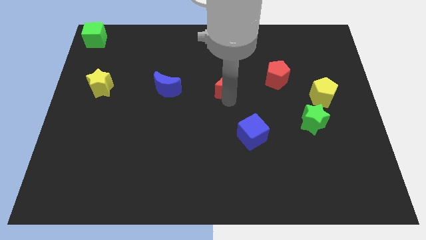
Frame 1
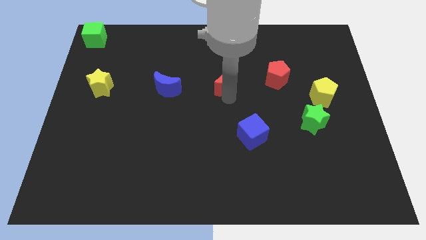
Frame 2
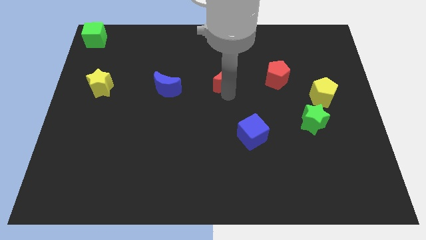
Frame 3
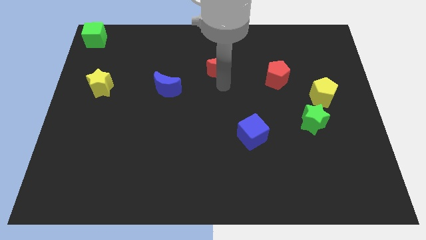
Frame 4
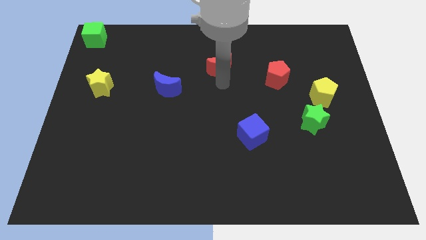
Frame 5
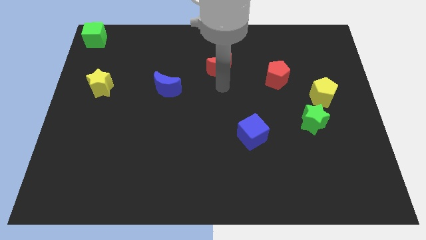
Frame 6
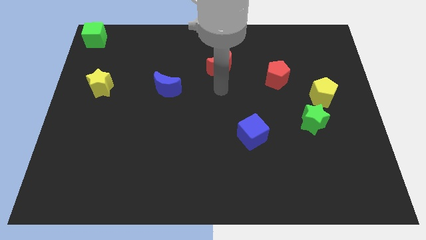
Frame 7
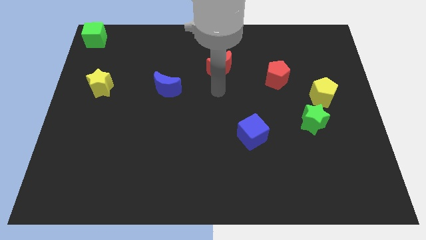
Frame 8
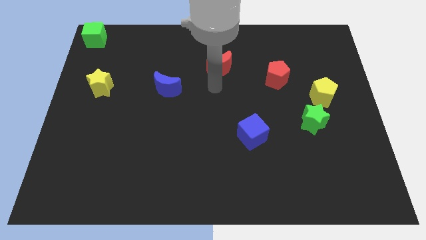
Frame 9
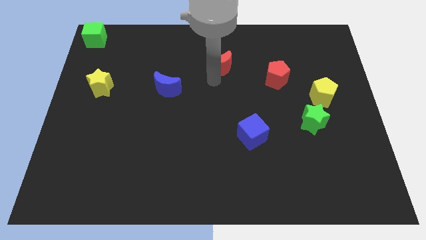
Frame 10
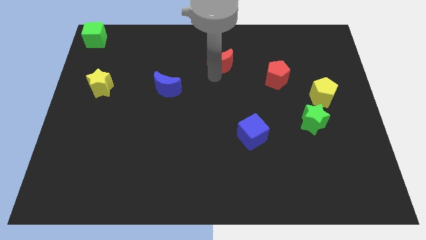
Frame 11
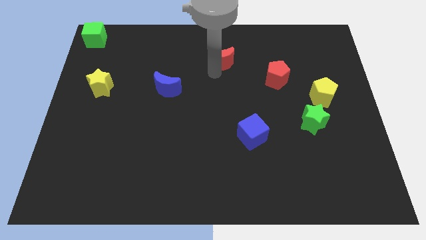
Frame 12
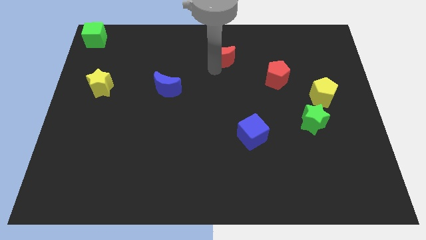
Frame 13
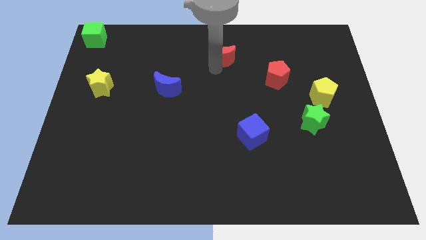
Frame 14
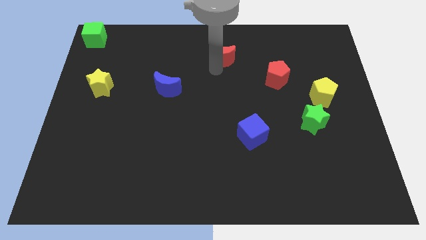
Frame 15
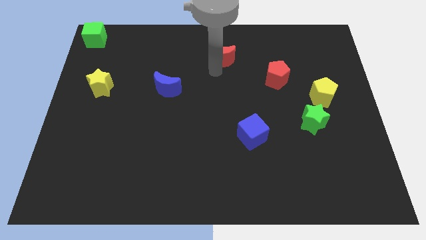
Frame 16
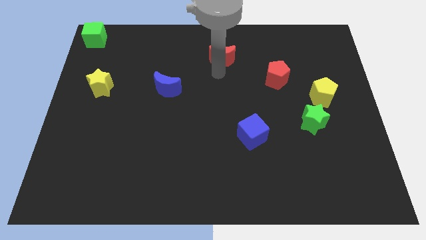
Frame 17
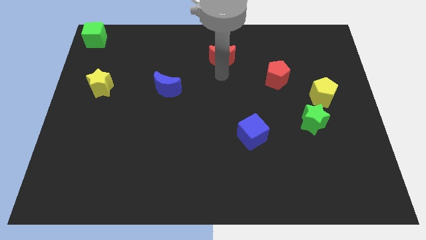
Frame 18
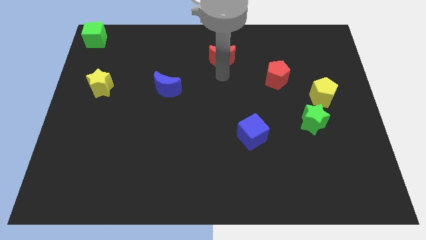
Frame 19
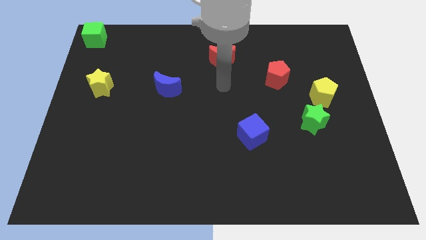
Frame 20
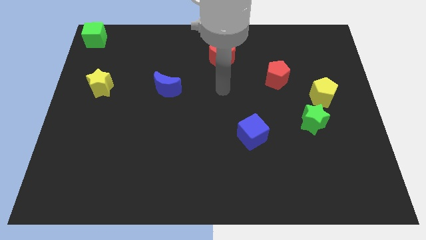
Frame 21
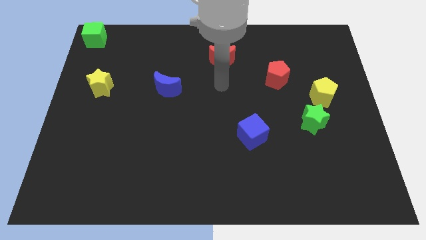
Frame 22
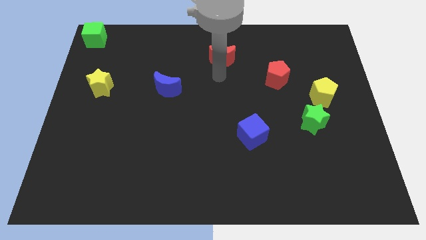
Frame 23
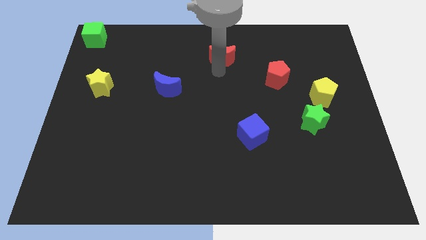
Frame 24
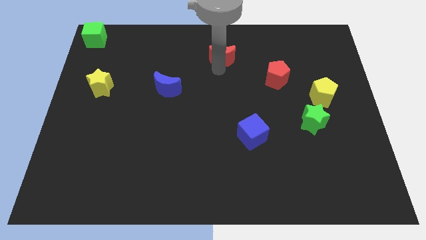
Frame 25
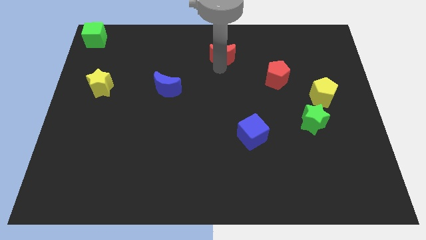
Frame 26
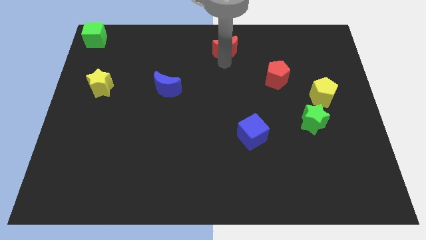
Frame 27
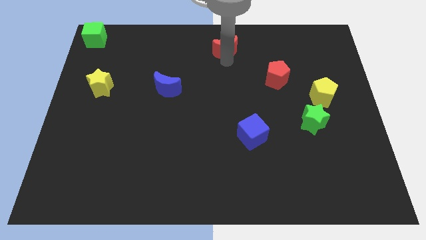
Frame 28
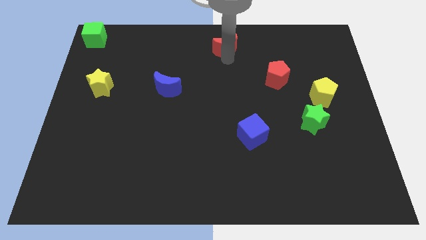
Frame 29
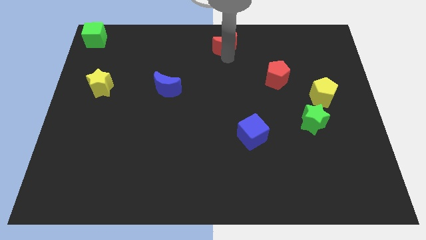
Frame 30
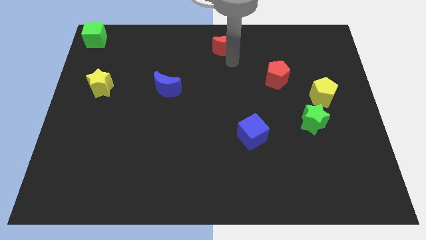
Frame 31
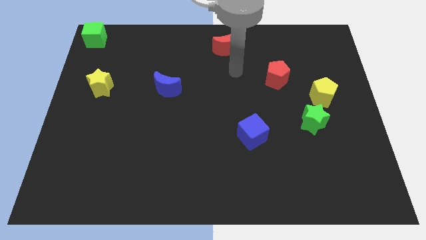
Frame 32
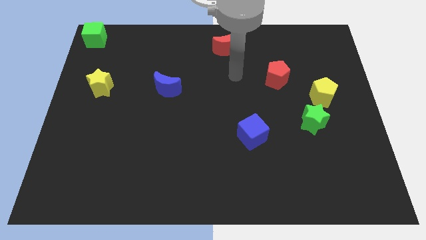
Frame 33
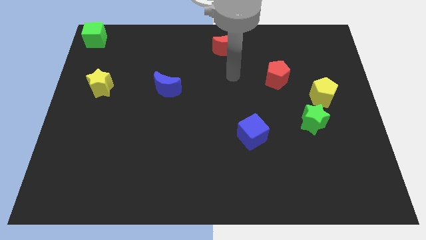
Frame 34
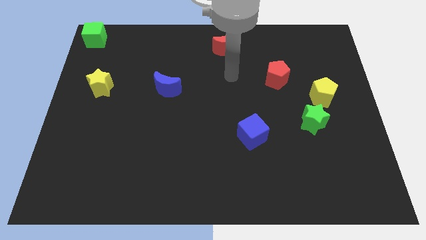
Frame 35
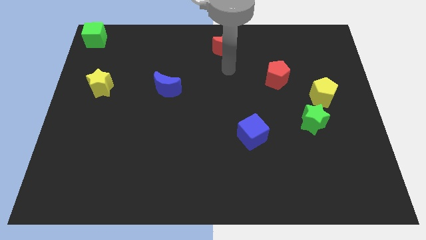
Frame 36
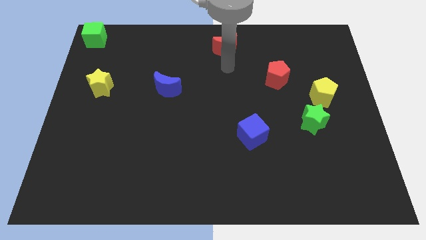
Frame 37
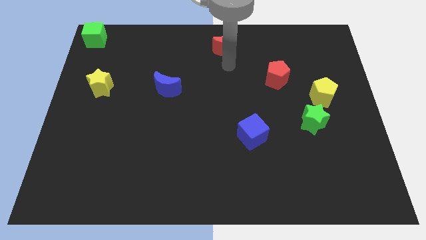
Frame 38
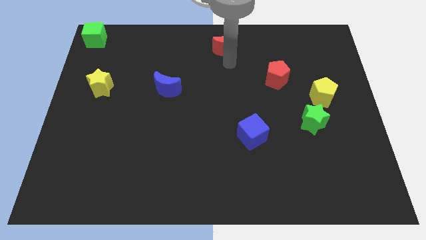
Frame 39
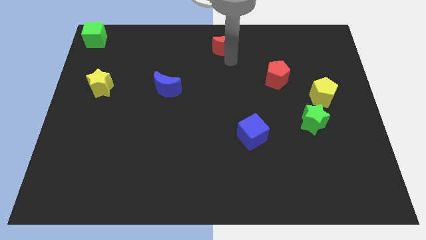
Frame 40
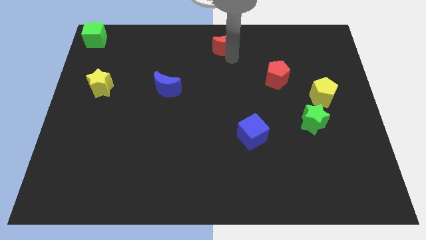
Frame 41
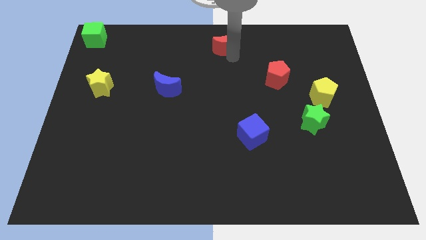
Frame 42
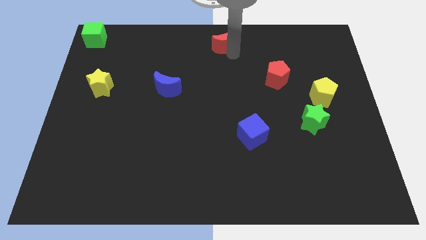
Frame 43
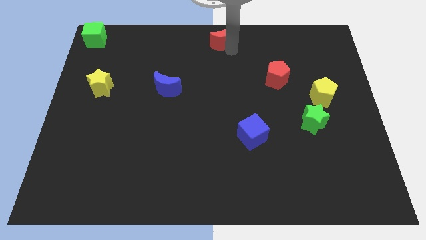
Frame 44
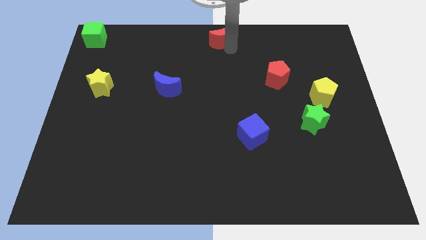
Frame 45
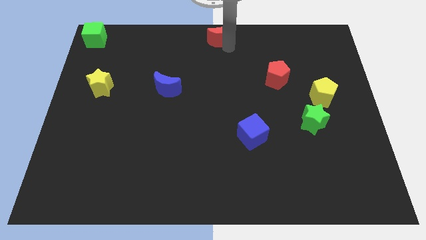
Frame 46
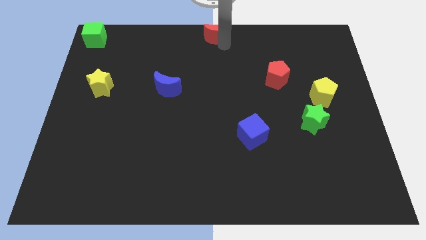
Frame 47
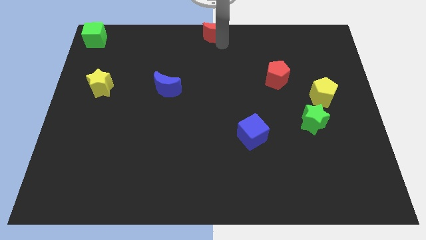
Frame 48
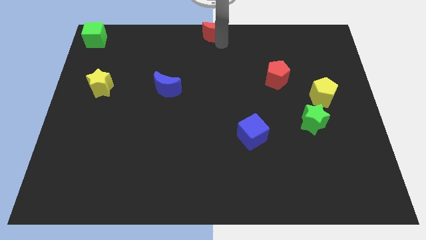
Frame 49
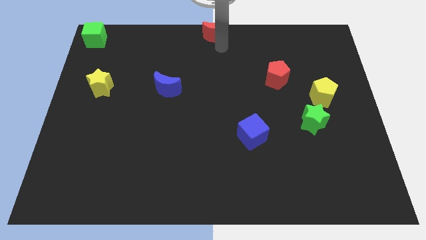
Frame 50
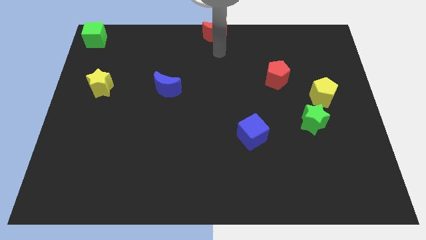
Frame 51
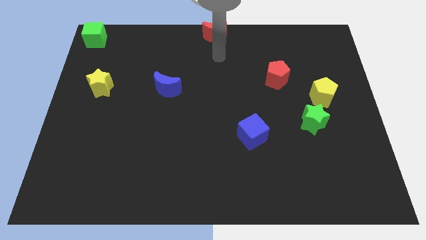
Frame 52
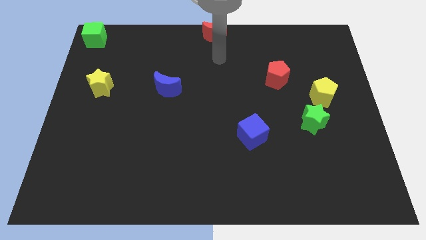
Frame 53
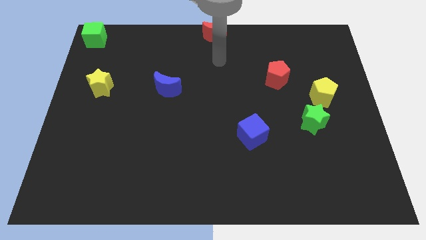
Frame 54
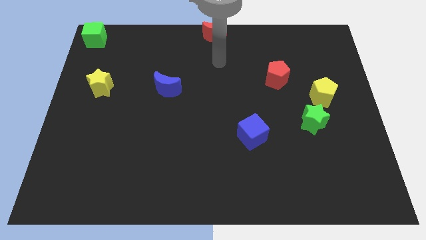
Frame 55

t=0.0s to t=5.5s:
push the red moon to the top center

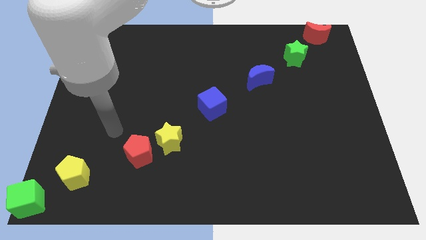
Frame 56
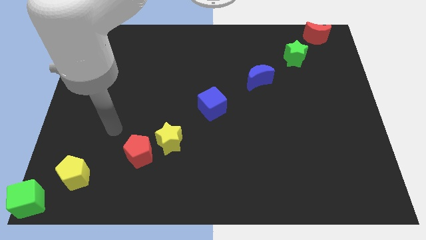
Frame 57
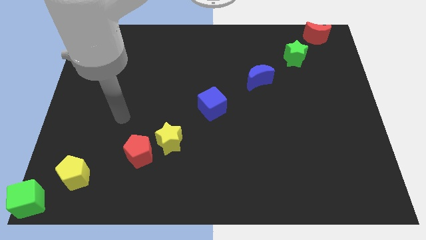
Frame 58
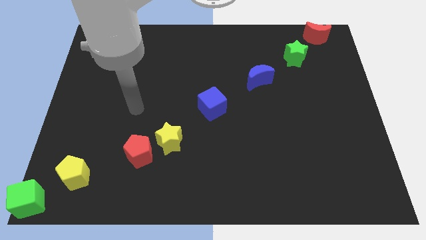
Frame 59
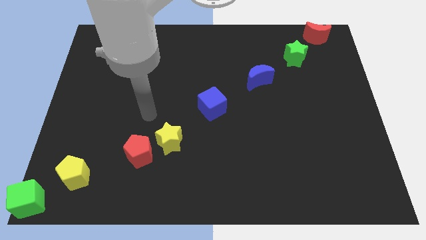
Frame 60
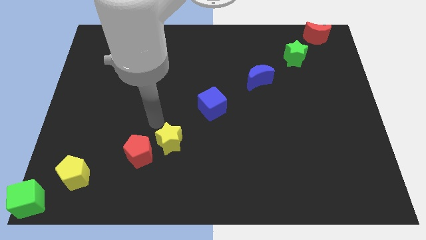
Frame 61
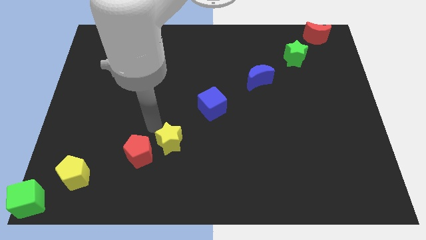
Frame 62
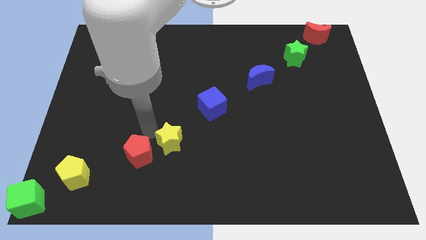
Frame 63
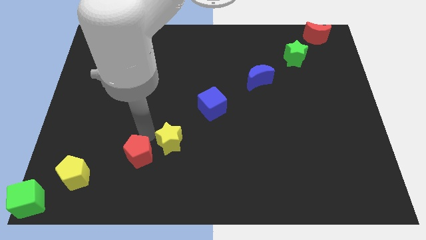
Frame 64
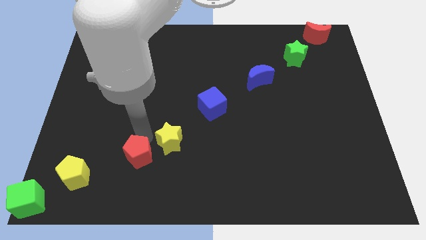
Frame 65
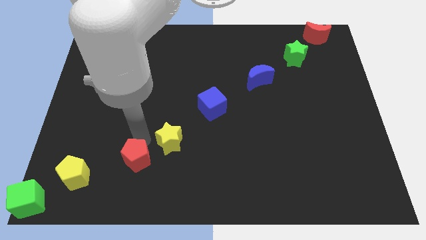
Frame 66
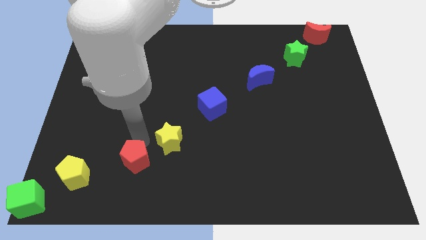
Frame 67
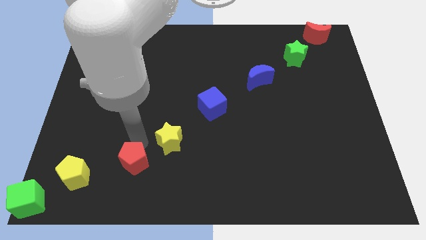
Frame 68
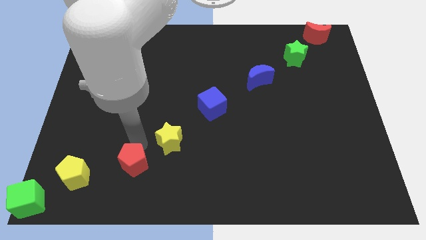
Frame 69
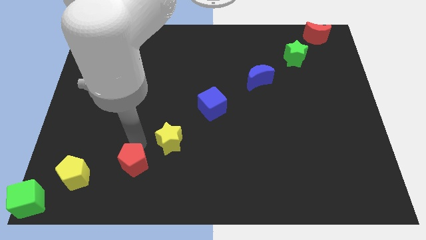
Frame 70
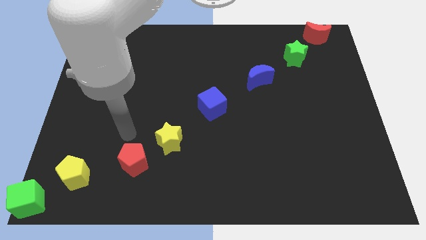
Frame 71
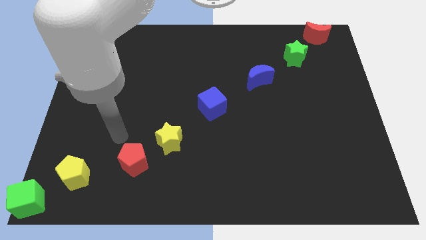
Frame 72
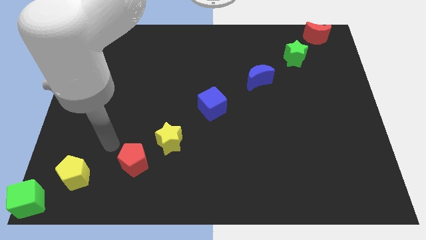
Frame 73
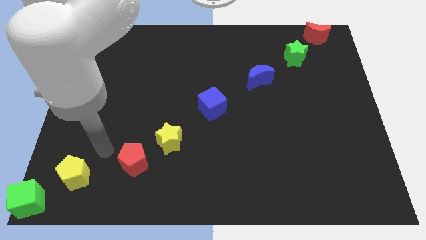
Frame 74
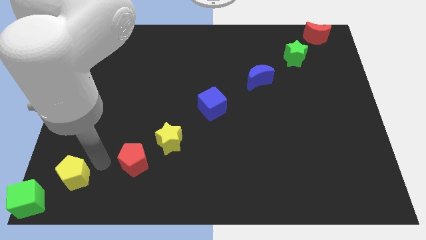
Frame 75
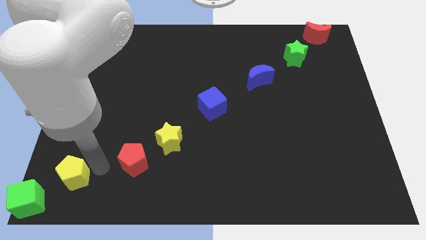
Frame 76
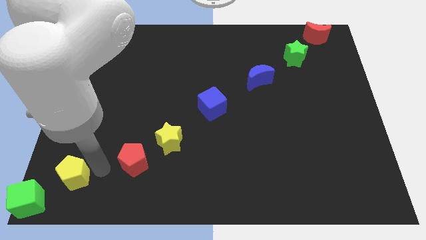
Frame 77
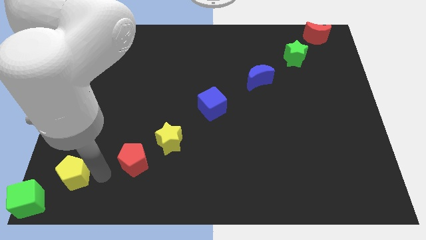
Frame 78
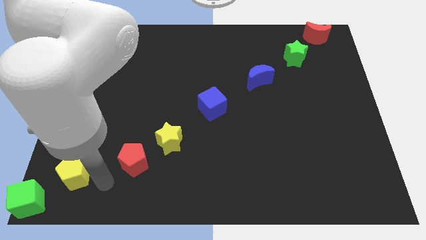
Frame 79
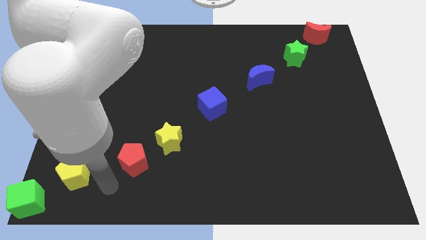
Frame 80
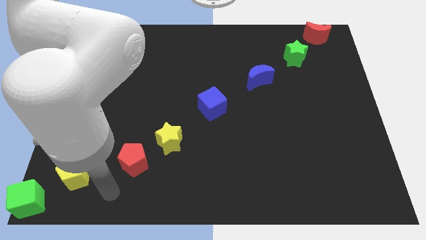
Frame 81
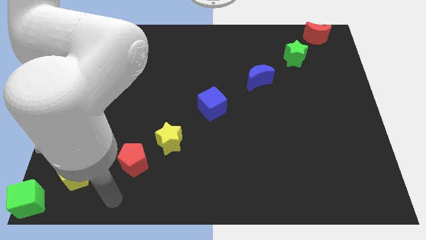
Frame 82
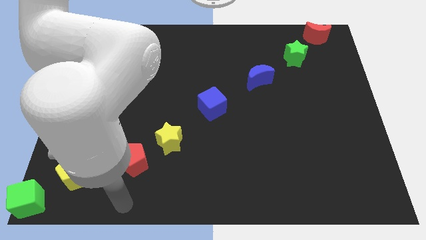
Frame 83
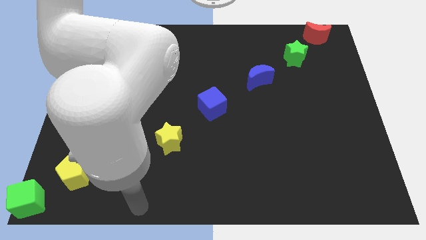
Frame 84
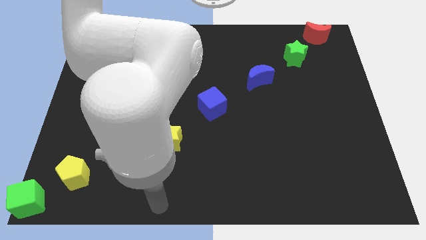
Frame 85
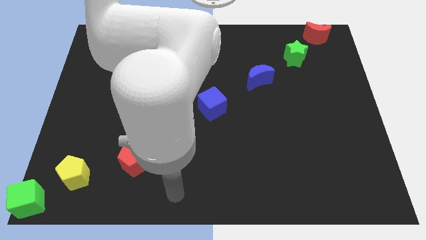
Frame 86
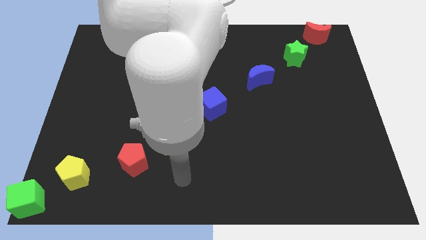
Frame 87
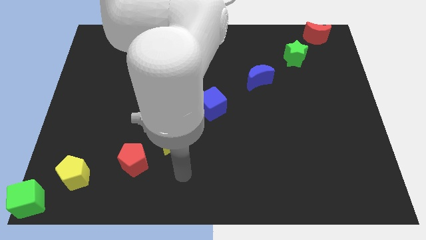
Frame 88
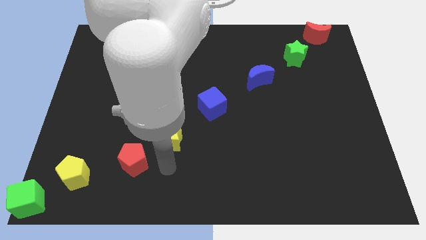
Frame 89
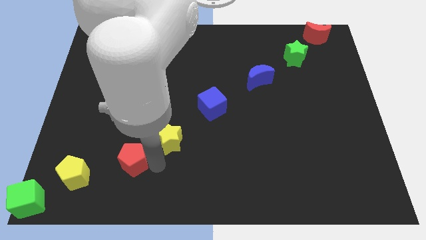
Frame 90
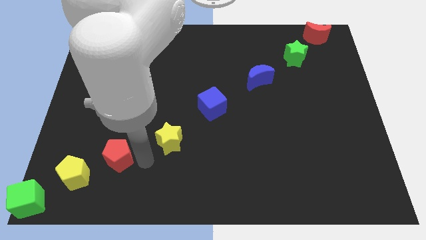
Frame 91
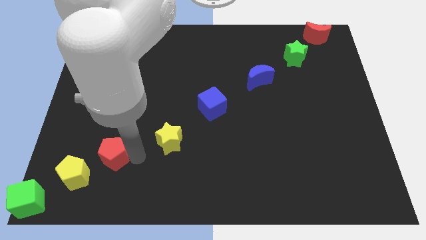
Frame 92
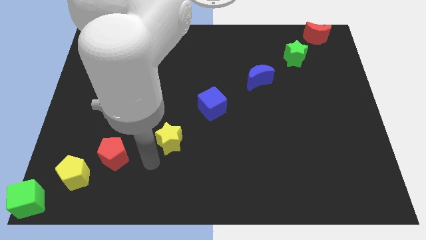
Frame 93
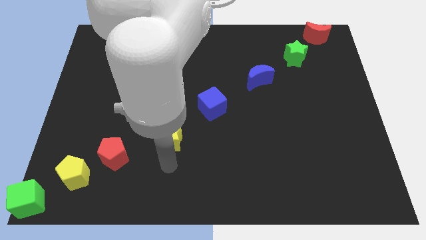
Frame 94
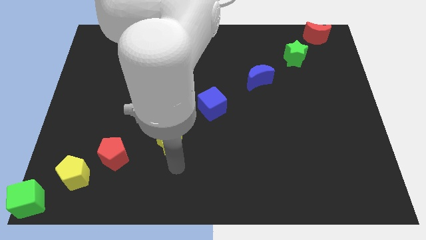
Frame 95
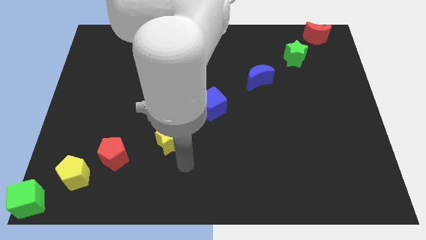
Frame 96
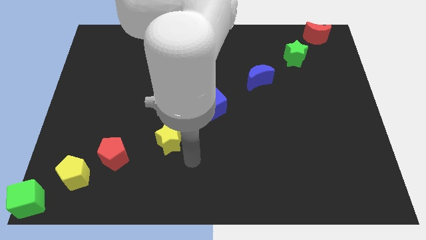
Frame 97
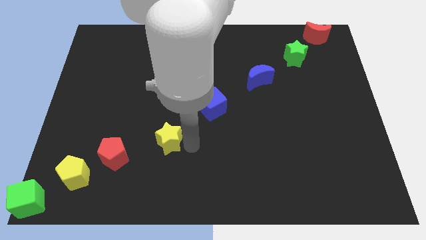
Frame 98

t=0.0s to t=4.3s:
push the red pentagon diagonally on the top right side of the yellow pentagon
